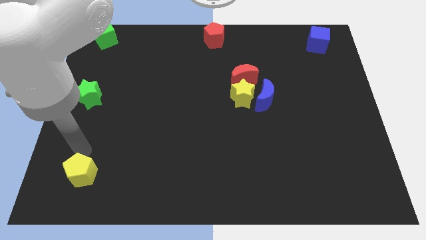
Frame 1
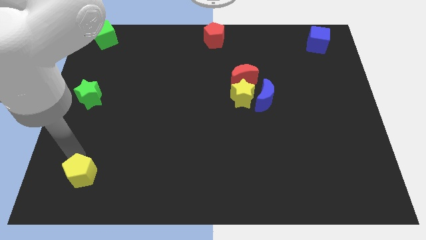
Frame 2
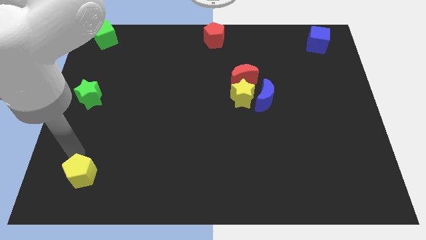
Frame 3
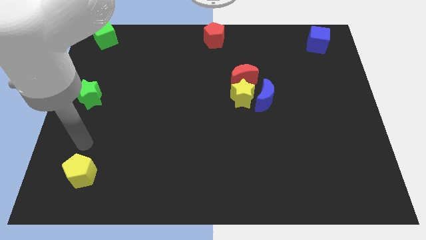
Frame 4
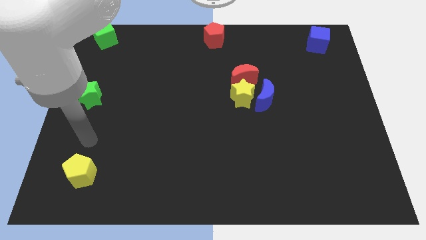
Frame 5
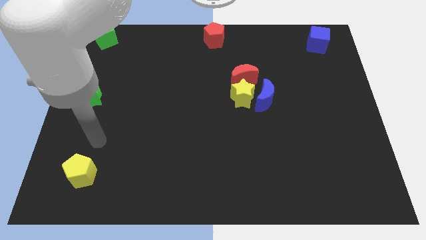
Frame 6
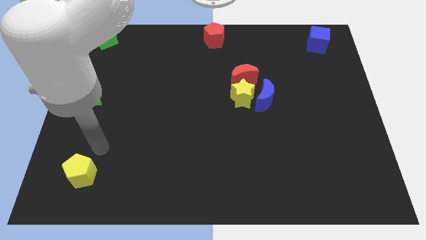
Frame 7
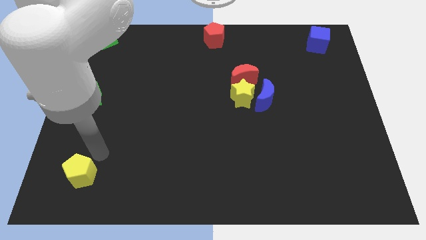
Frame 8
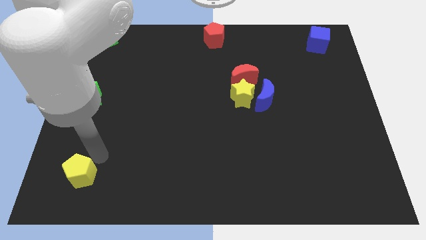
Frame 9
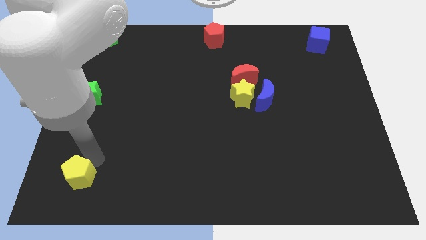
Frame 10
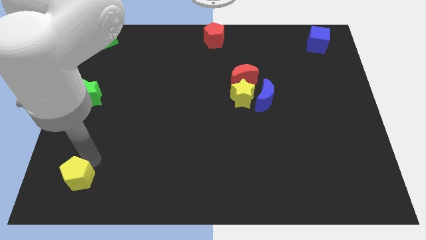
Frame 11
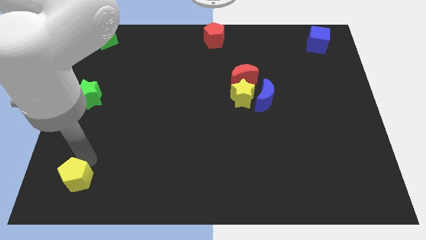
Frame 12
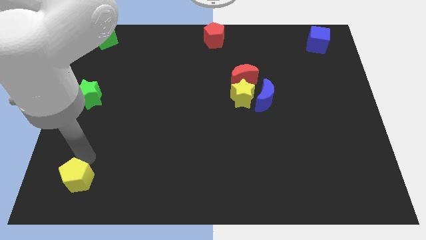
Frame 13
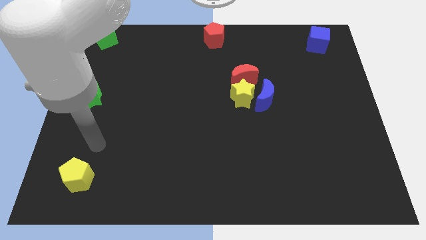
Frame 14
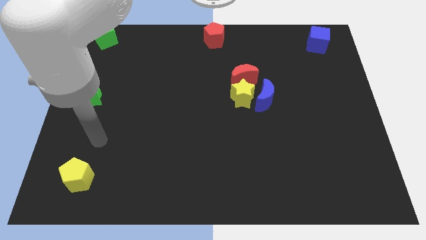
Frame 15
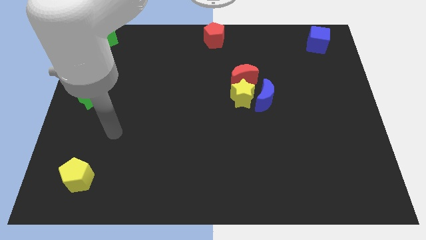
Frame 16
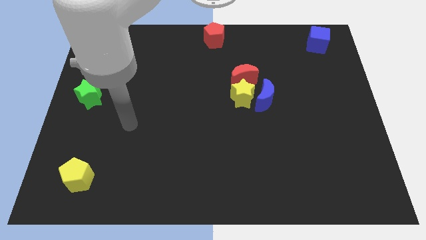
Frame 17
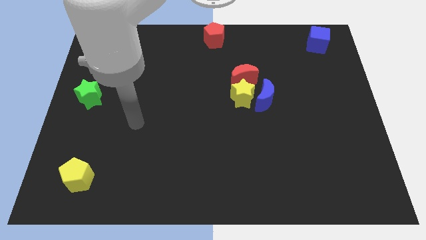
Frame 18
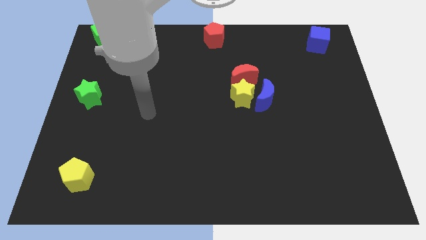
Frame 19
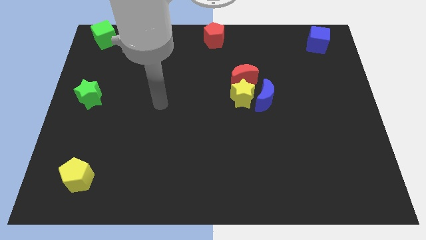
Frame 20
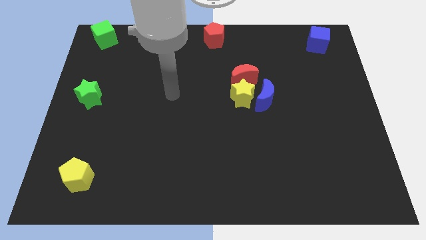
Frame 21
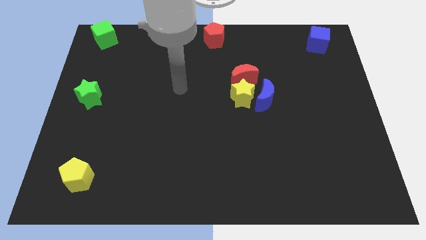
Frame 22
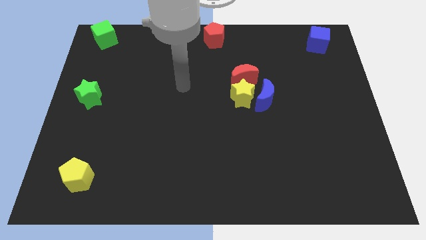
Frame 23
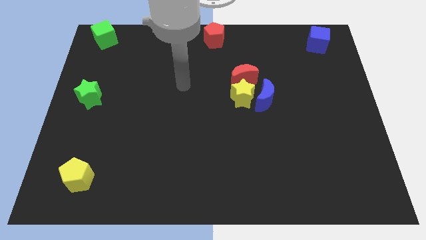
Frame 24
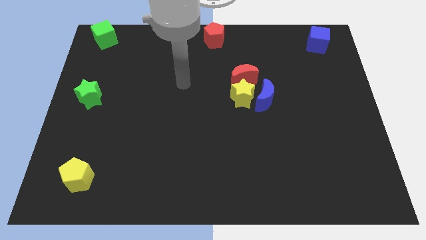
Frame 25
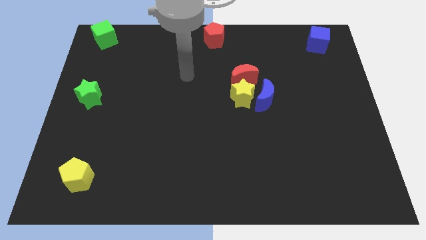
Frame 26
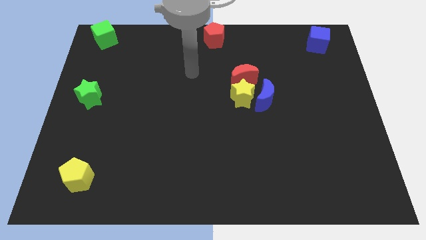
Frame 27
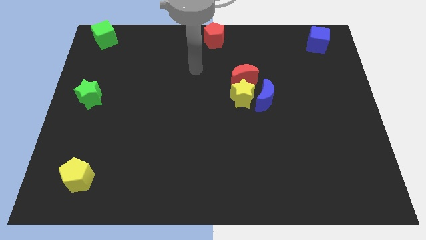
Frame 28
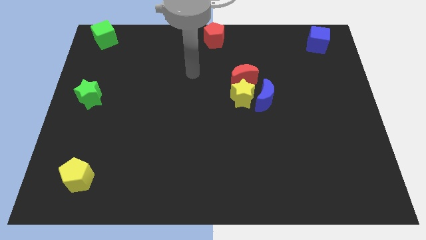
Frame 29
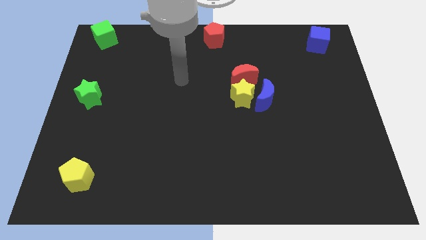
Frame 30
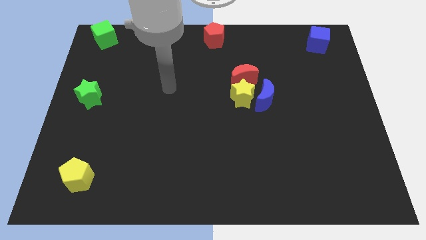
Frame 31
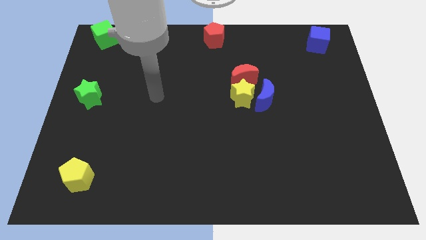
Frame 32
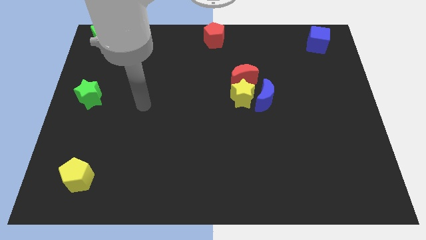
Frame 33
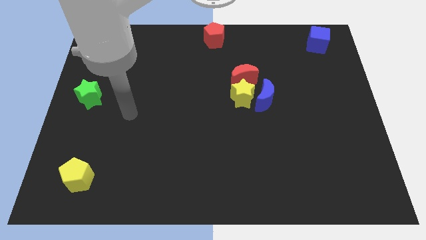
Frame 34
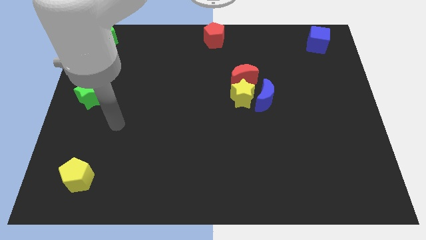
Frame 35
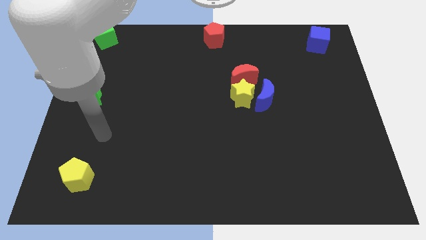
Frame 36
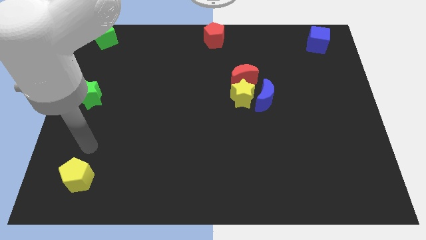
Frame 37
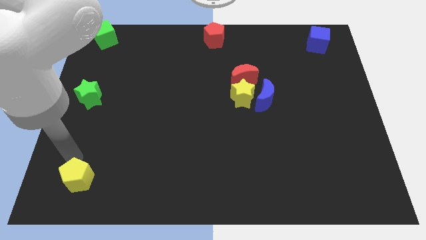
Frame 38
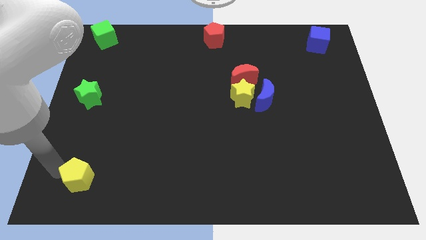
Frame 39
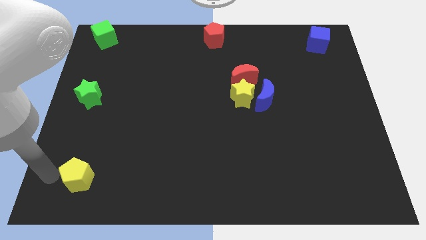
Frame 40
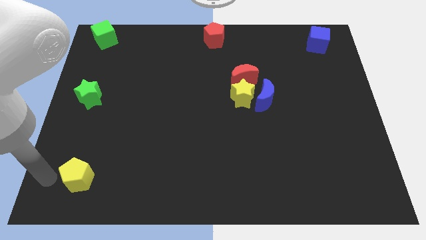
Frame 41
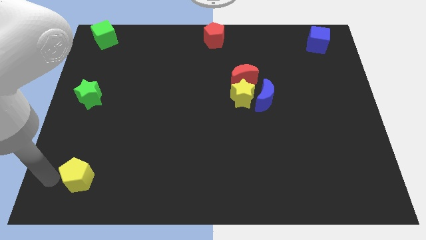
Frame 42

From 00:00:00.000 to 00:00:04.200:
push your arm near yellow pentagon

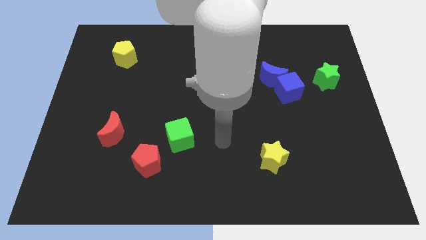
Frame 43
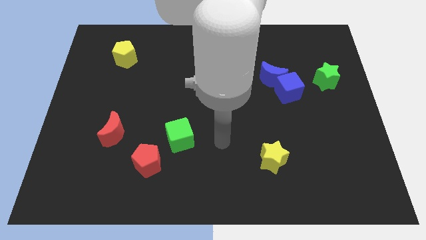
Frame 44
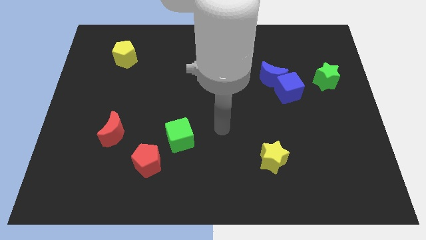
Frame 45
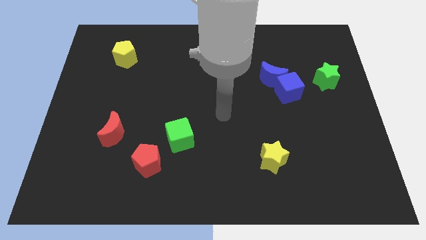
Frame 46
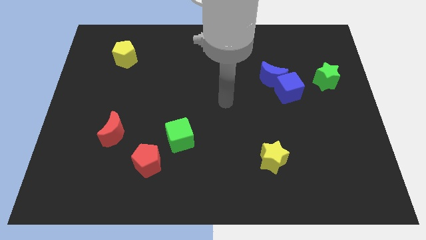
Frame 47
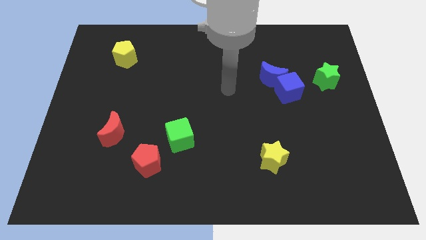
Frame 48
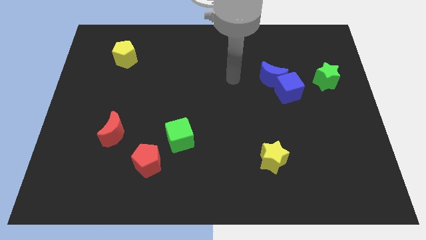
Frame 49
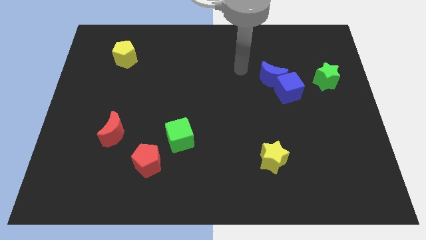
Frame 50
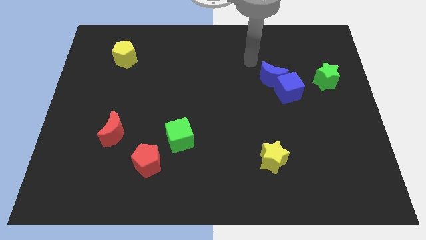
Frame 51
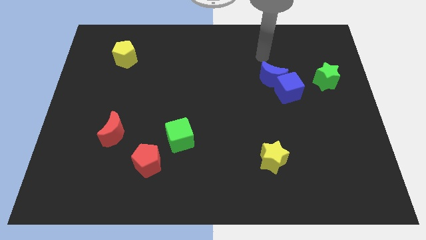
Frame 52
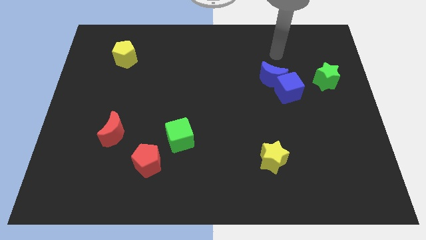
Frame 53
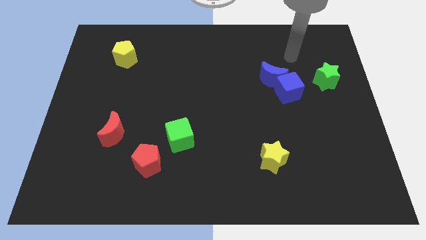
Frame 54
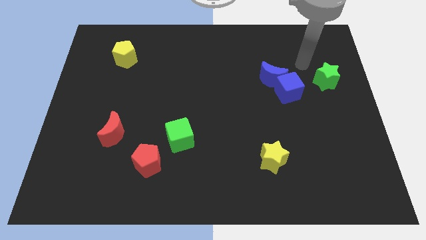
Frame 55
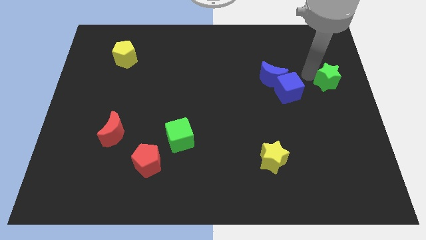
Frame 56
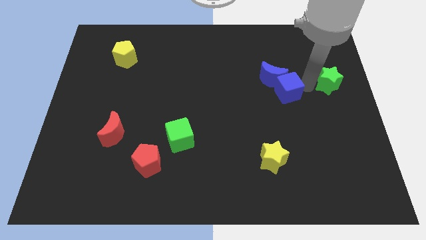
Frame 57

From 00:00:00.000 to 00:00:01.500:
move your arm to the top of the green star

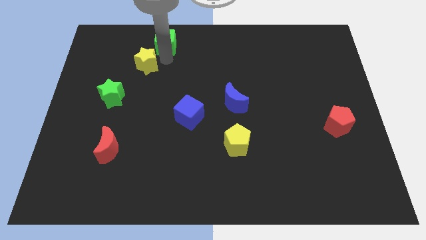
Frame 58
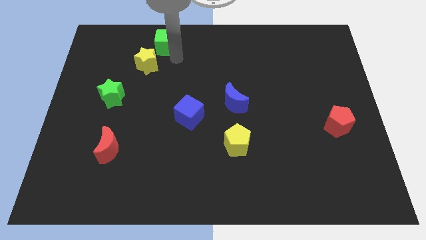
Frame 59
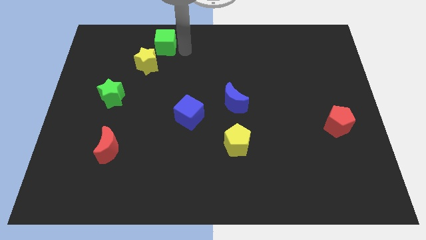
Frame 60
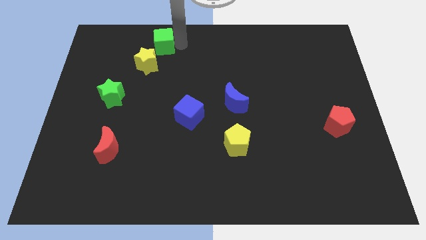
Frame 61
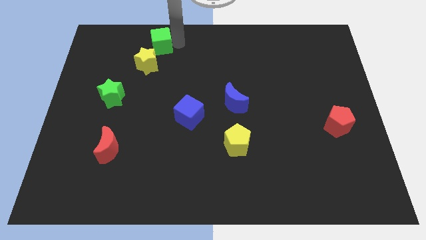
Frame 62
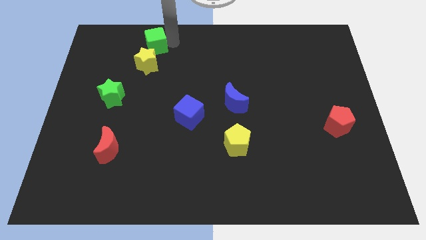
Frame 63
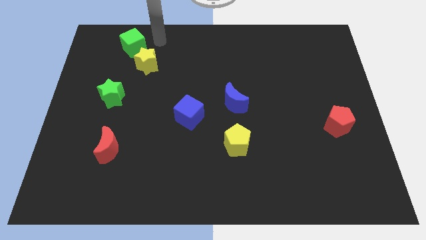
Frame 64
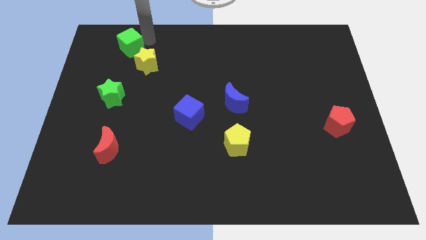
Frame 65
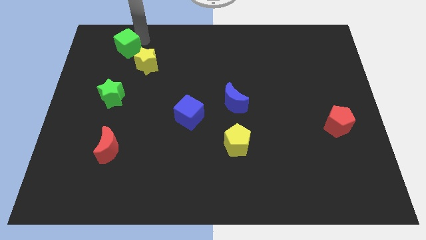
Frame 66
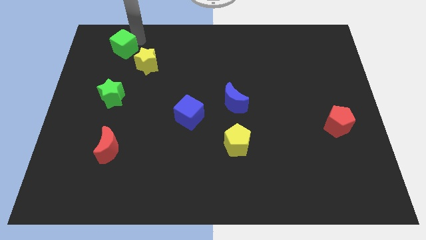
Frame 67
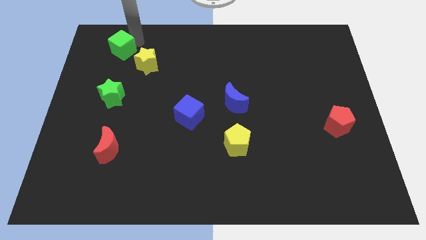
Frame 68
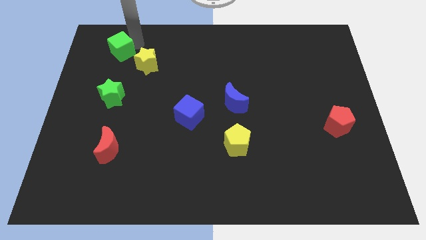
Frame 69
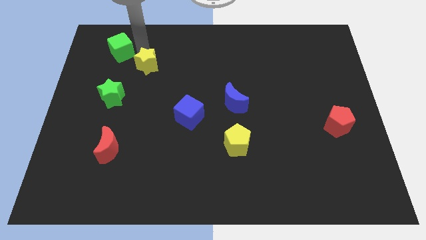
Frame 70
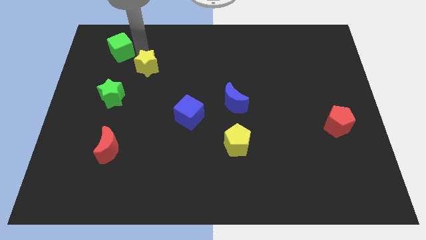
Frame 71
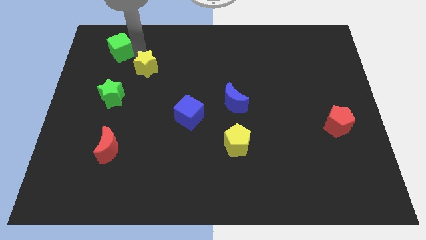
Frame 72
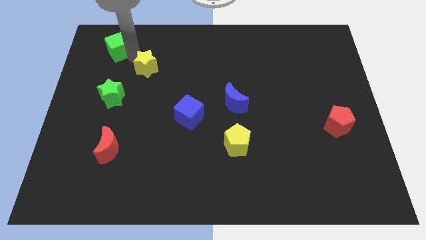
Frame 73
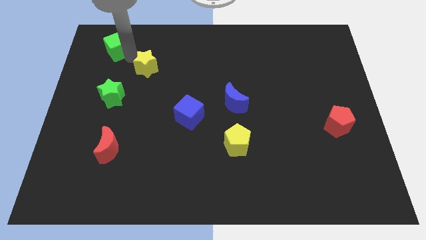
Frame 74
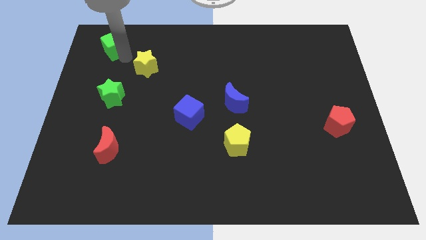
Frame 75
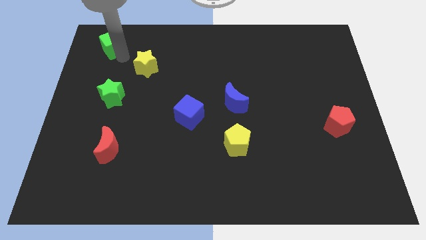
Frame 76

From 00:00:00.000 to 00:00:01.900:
separate the yellow star and green cube

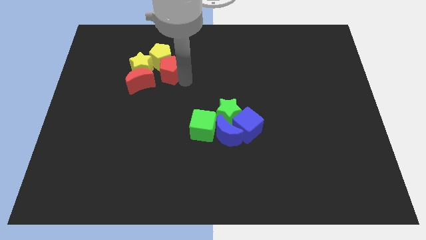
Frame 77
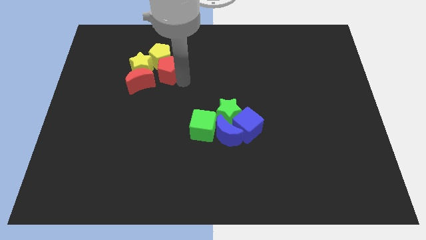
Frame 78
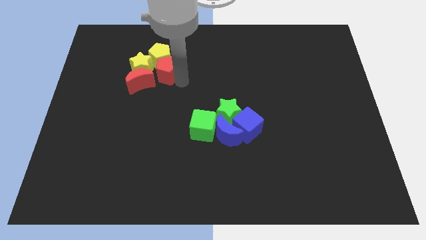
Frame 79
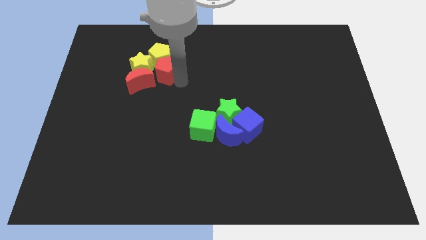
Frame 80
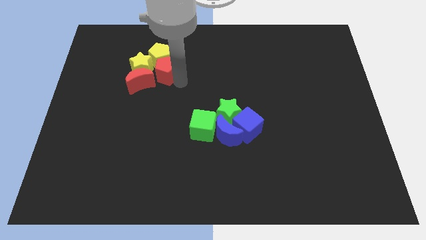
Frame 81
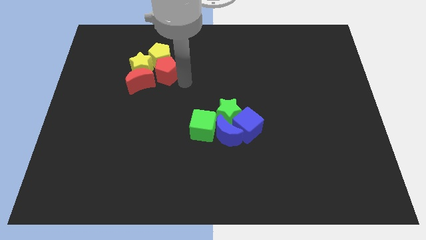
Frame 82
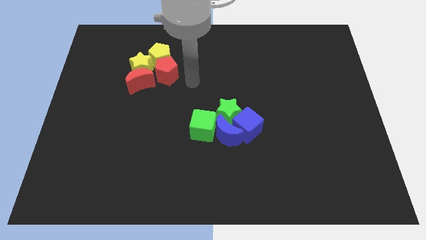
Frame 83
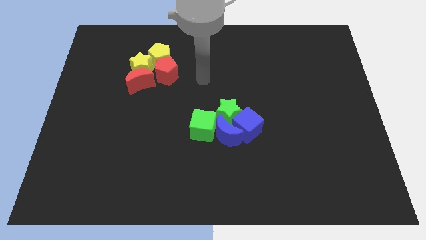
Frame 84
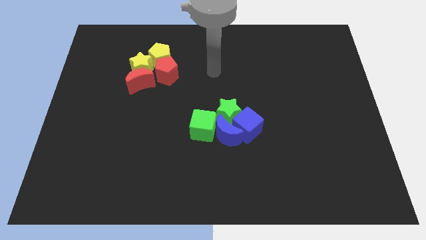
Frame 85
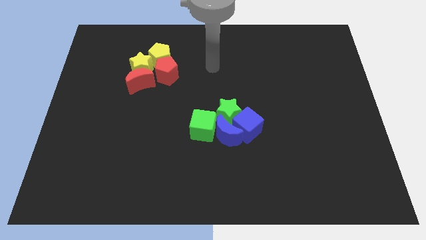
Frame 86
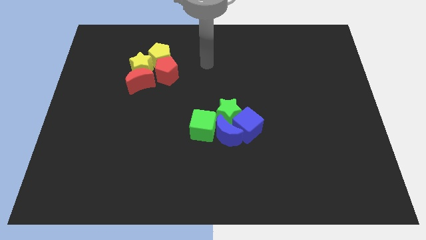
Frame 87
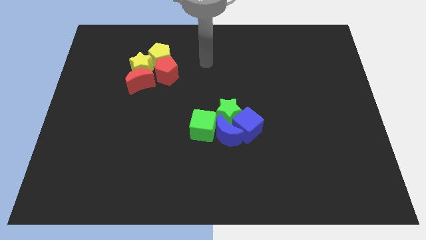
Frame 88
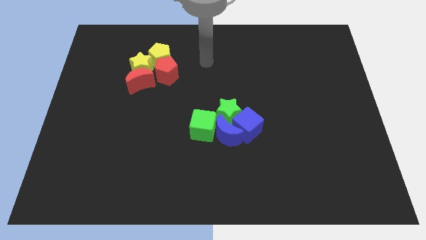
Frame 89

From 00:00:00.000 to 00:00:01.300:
place your arm to the right of the red and yellow pentagons
